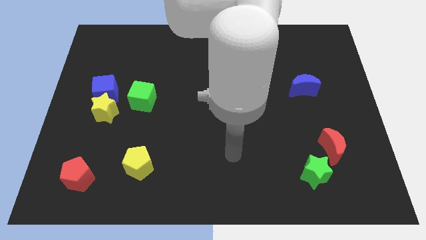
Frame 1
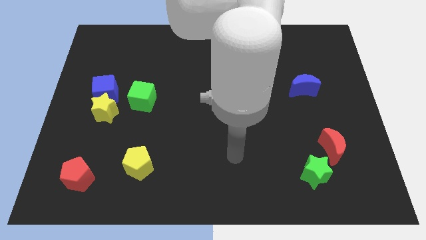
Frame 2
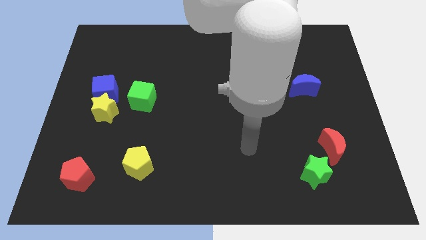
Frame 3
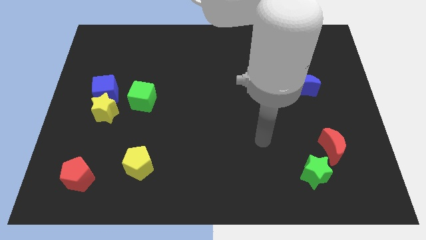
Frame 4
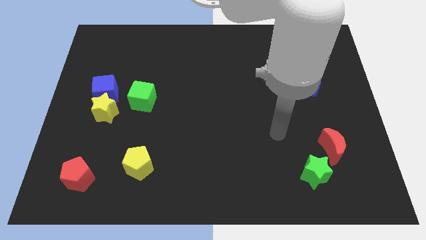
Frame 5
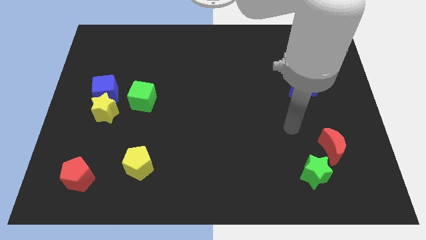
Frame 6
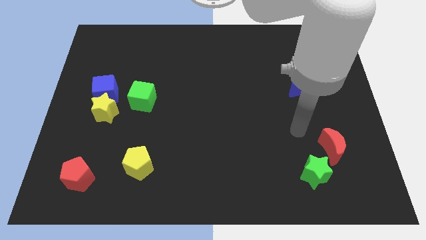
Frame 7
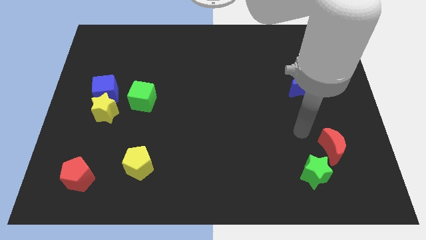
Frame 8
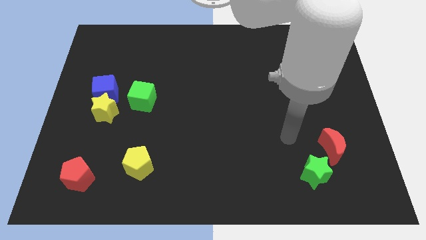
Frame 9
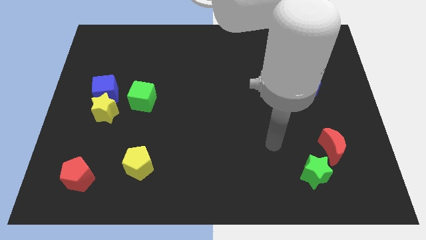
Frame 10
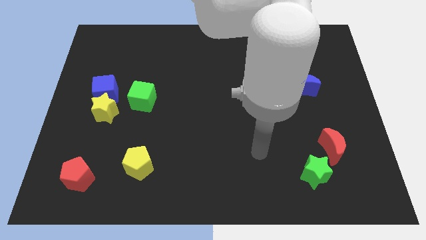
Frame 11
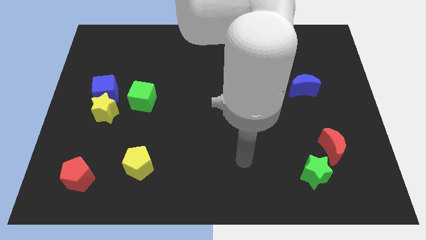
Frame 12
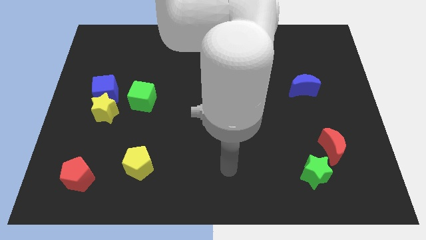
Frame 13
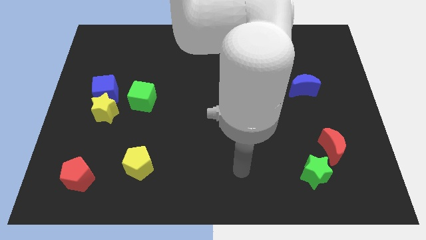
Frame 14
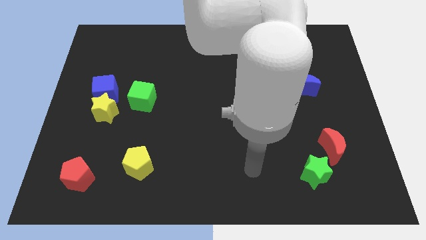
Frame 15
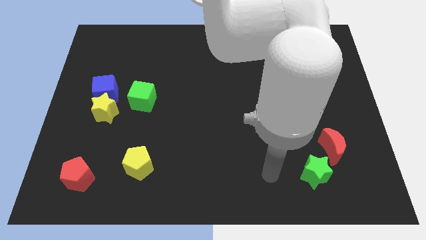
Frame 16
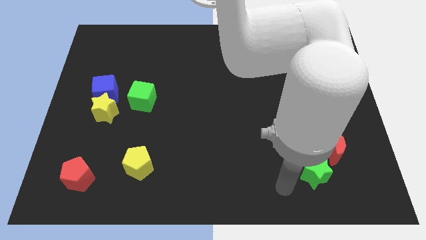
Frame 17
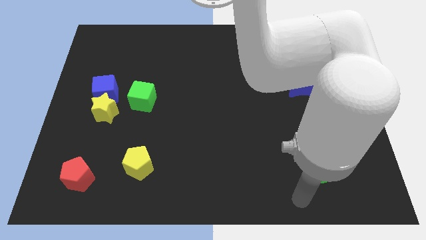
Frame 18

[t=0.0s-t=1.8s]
move your arm to the bottom of the green star

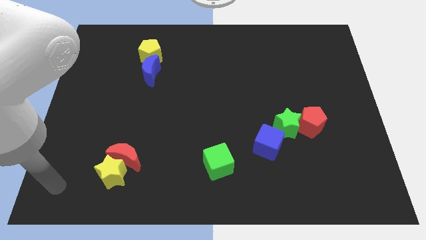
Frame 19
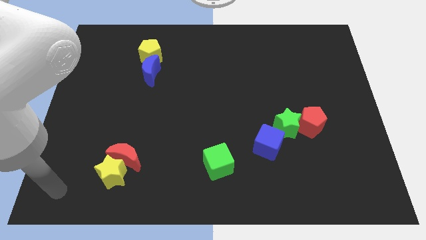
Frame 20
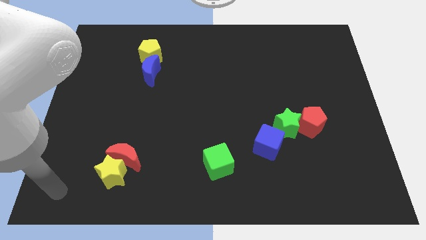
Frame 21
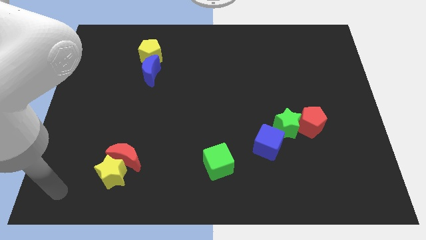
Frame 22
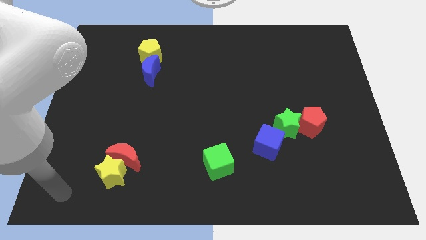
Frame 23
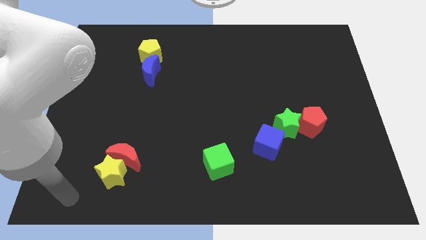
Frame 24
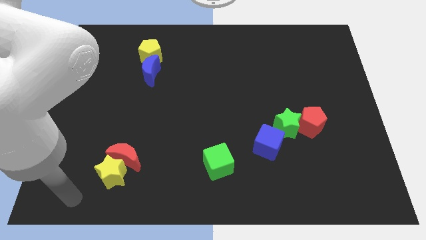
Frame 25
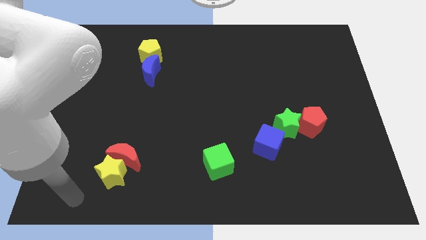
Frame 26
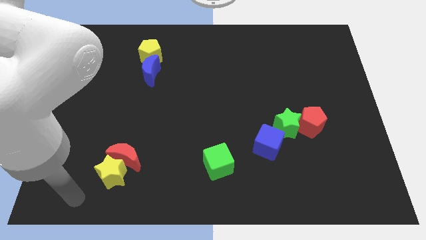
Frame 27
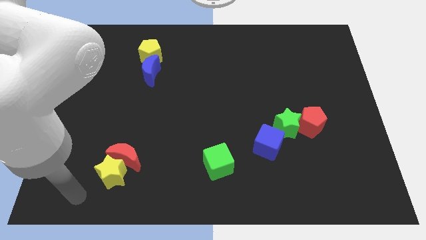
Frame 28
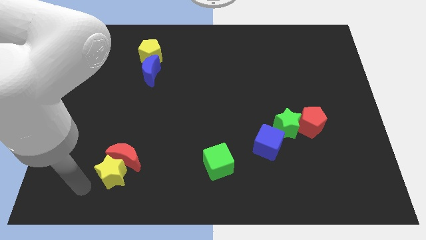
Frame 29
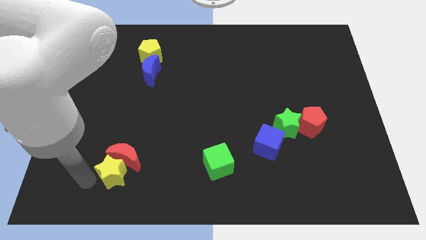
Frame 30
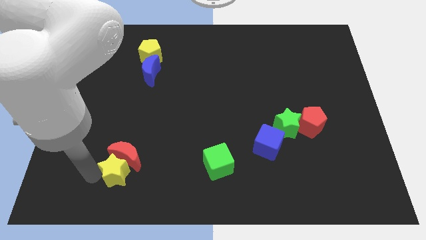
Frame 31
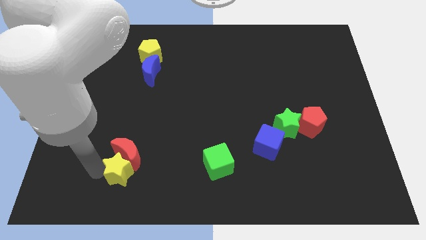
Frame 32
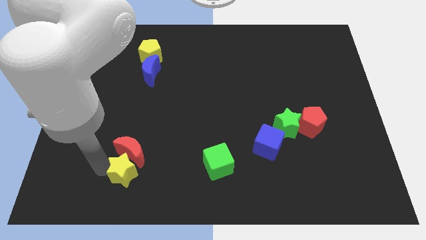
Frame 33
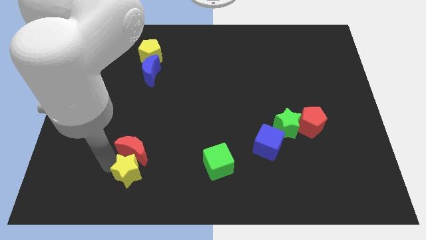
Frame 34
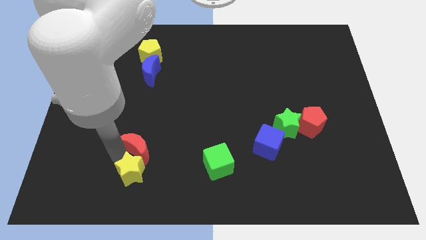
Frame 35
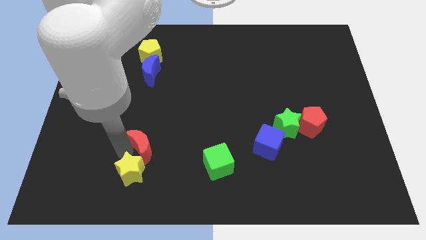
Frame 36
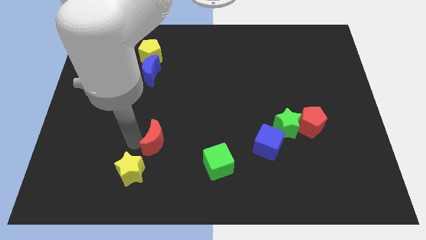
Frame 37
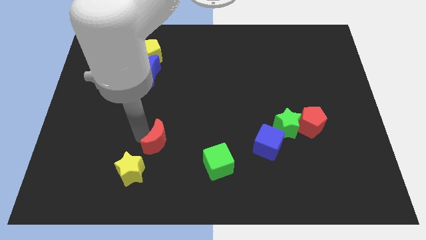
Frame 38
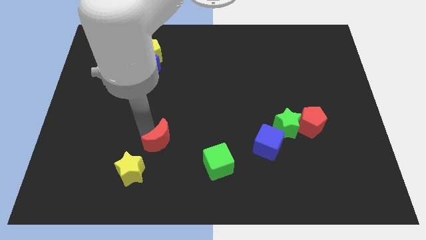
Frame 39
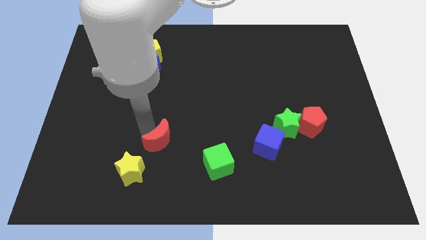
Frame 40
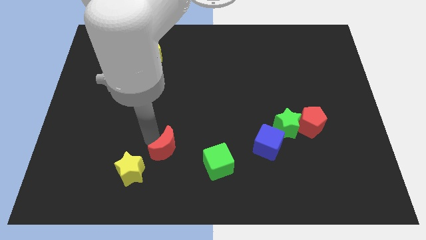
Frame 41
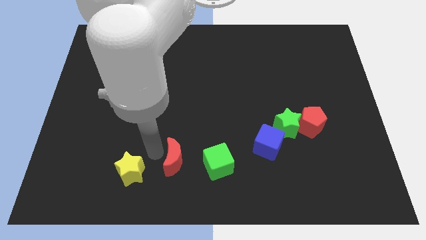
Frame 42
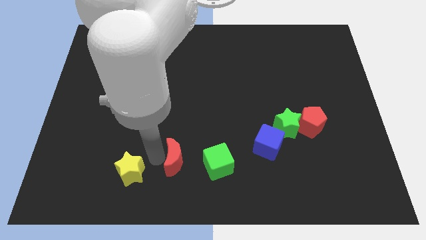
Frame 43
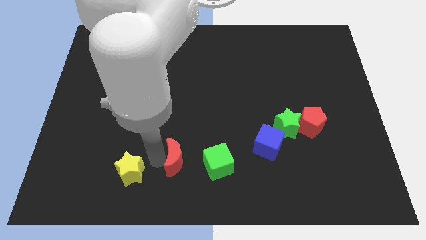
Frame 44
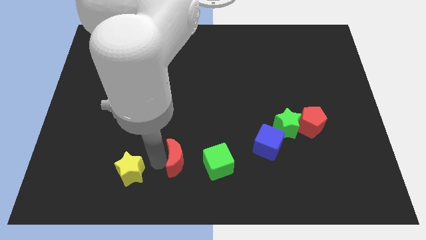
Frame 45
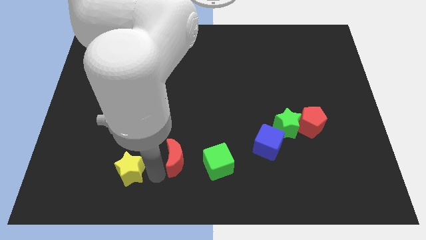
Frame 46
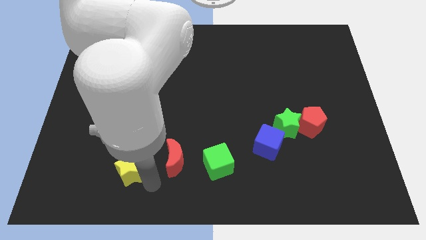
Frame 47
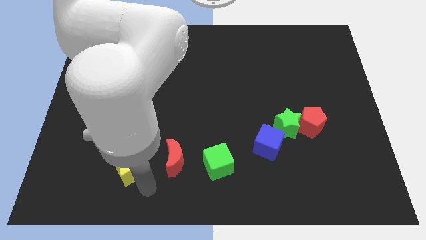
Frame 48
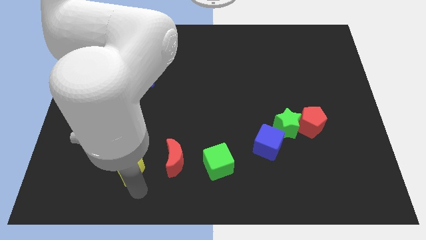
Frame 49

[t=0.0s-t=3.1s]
move the red crescent to the right of the yellow star

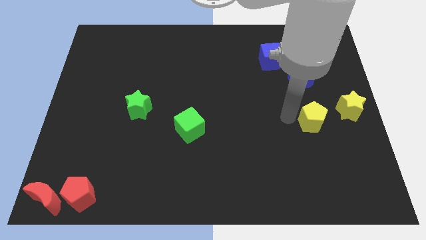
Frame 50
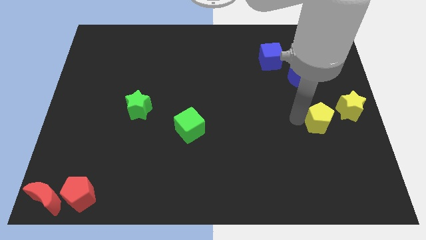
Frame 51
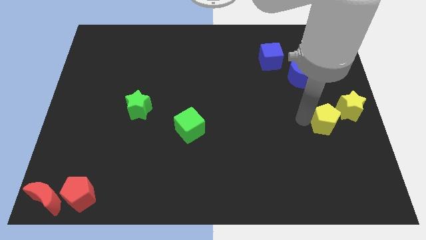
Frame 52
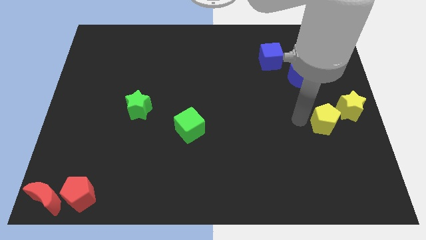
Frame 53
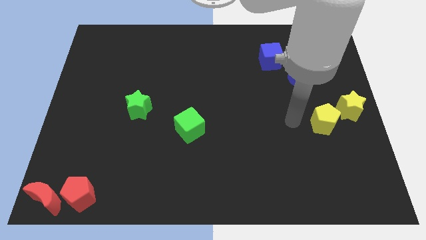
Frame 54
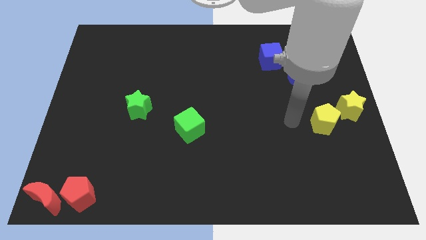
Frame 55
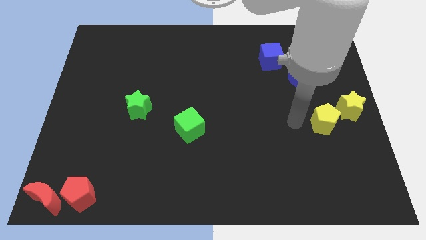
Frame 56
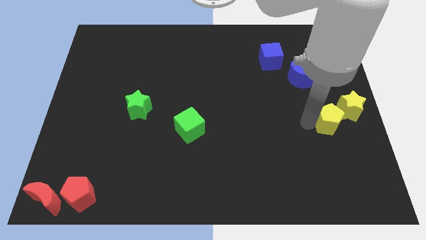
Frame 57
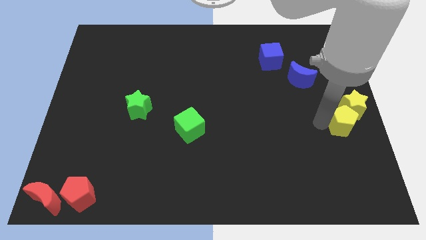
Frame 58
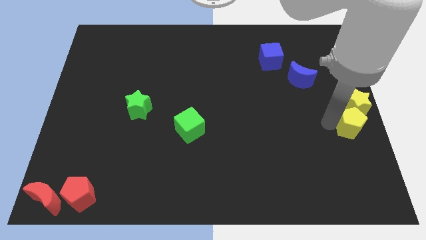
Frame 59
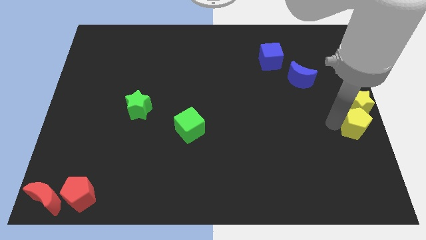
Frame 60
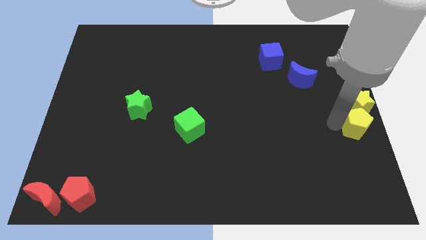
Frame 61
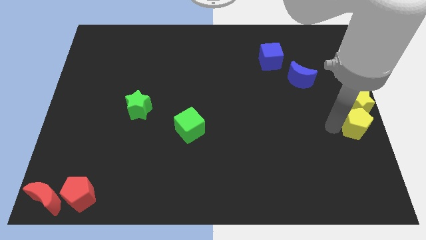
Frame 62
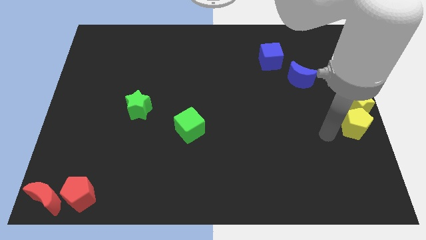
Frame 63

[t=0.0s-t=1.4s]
push the yellow pentagon into the yellow star

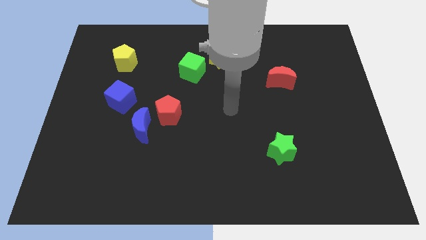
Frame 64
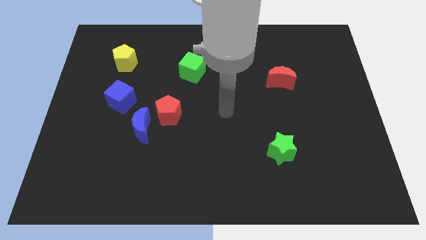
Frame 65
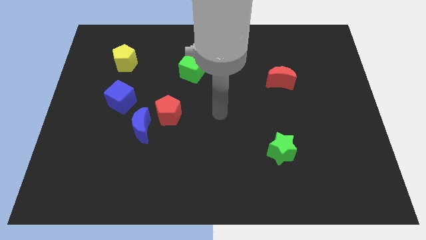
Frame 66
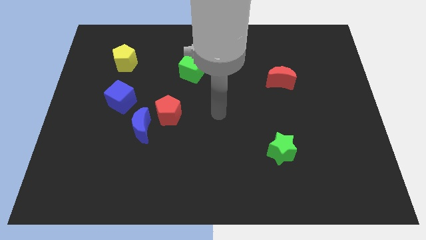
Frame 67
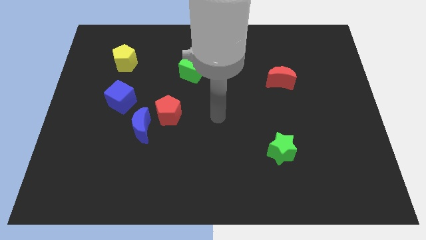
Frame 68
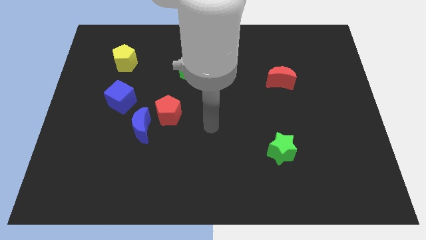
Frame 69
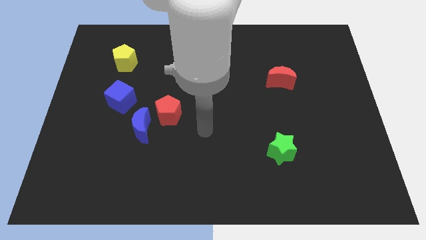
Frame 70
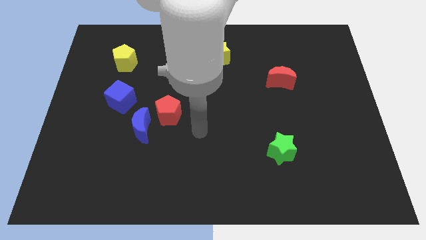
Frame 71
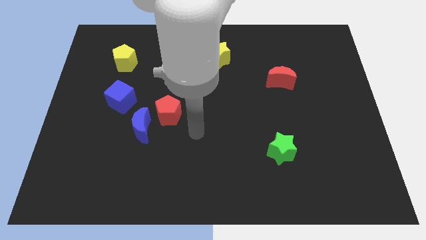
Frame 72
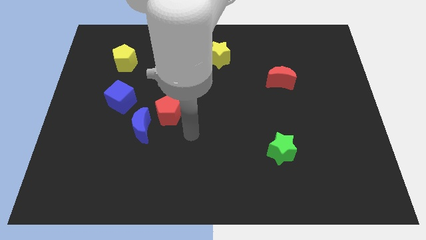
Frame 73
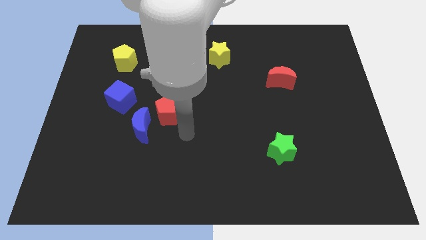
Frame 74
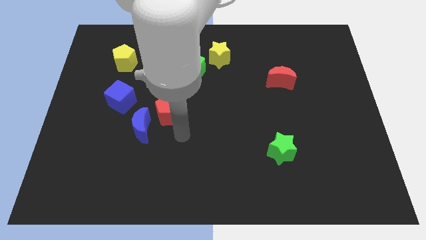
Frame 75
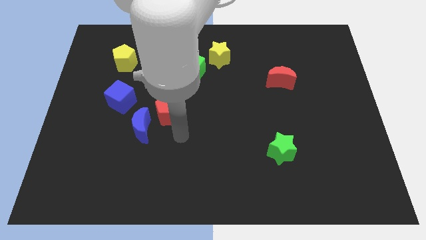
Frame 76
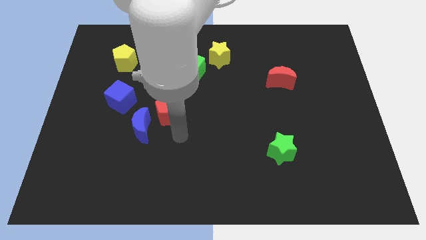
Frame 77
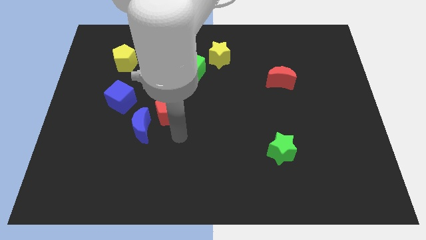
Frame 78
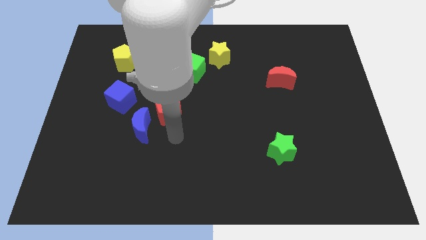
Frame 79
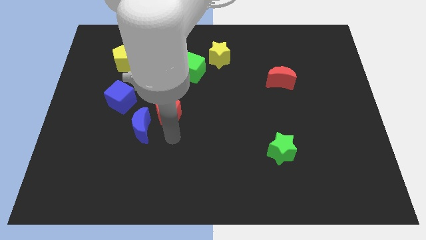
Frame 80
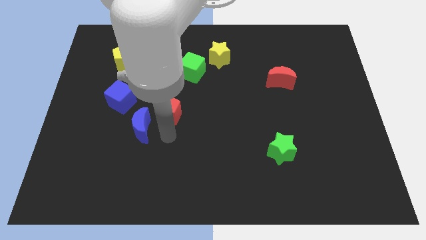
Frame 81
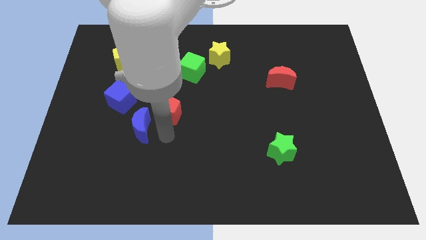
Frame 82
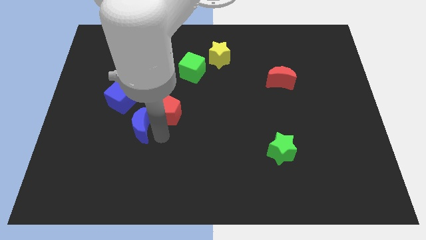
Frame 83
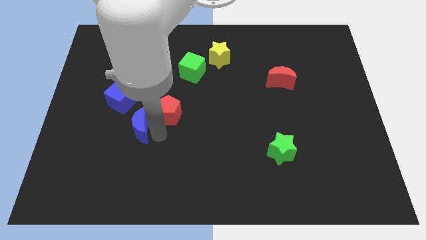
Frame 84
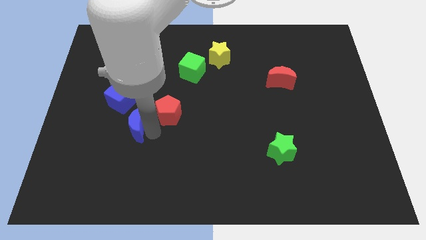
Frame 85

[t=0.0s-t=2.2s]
move the arm to the bottom of the red pentagon

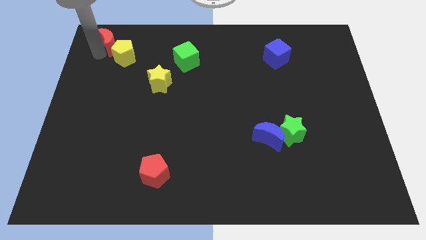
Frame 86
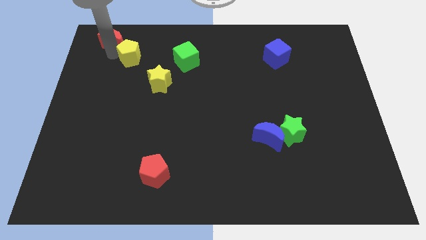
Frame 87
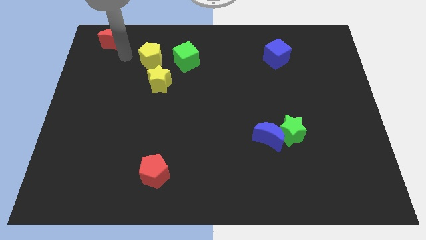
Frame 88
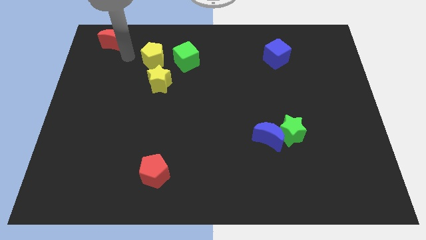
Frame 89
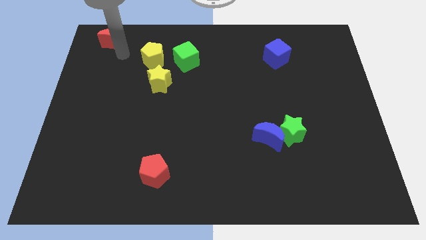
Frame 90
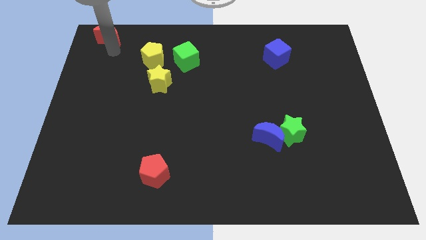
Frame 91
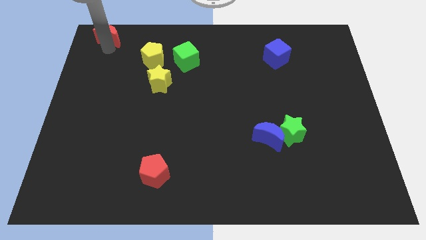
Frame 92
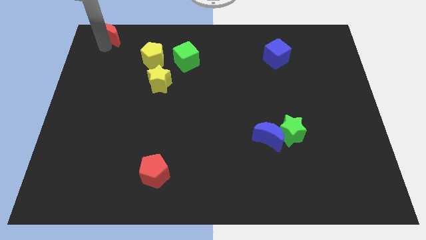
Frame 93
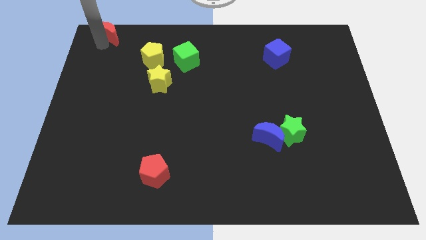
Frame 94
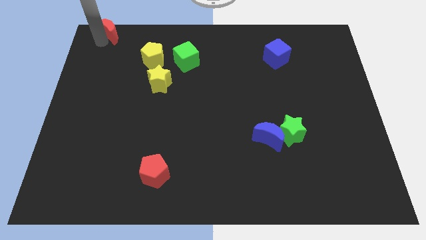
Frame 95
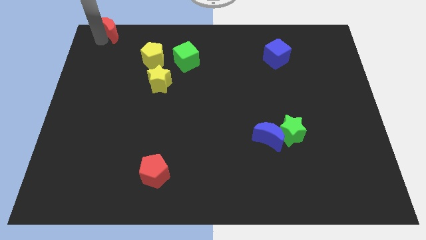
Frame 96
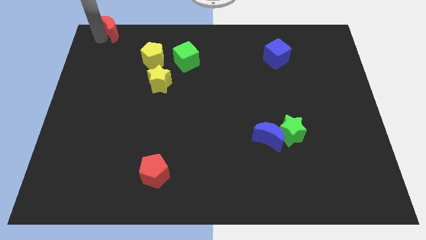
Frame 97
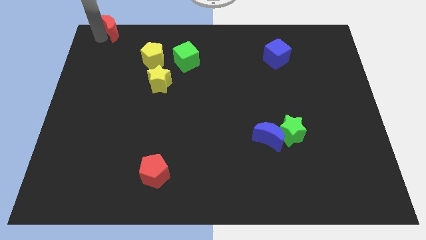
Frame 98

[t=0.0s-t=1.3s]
separate the yellow pentagon and red moon
